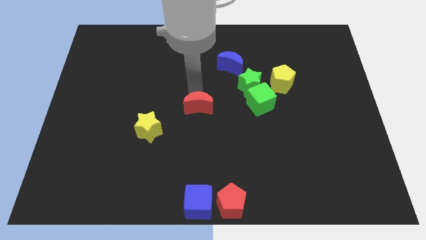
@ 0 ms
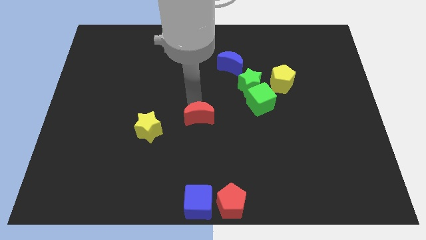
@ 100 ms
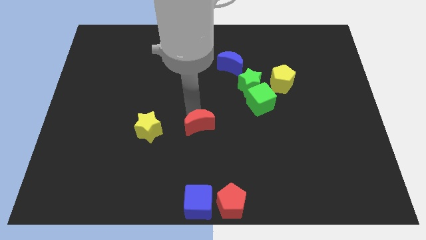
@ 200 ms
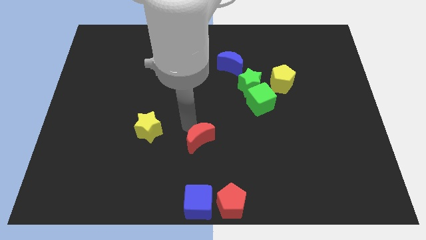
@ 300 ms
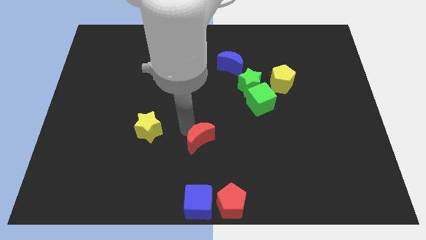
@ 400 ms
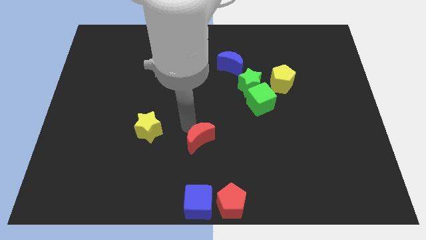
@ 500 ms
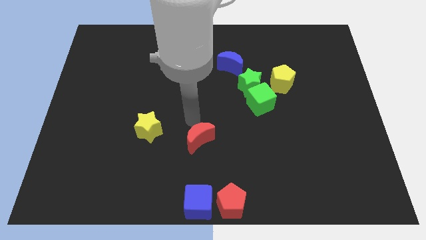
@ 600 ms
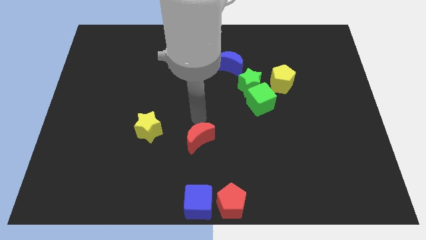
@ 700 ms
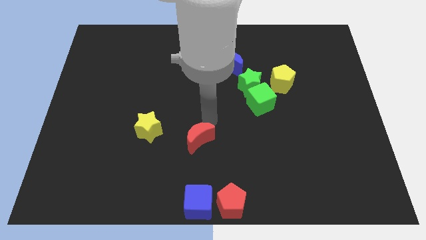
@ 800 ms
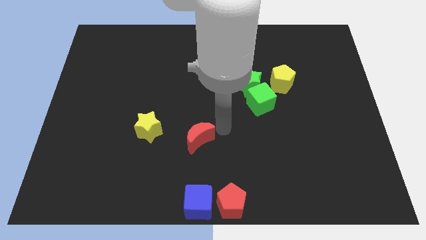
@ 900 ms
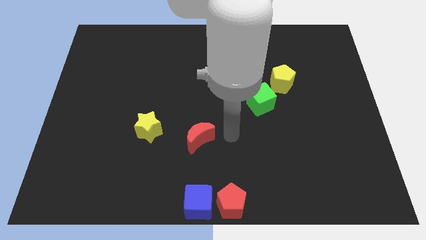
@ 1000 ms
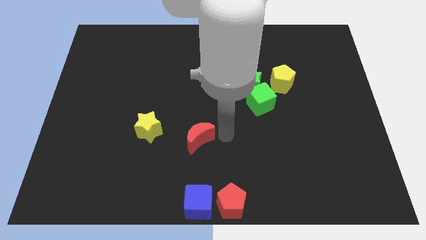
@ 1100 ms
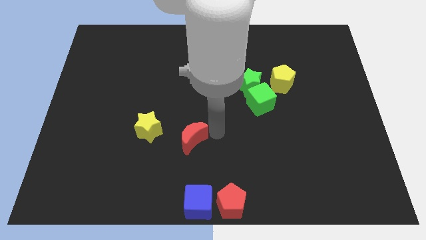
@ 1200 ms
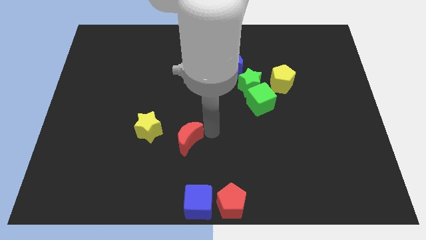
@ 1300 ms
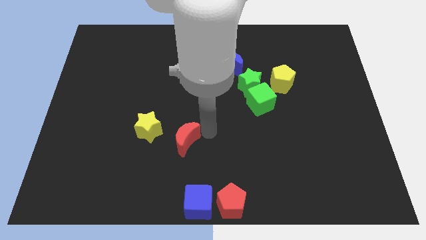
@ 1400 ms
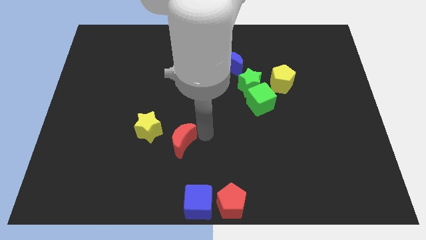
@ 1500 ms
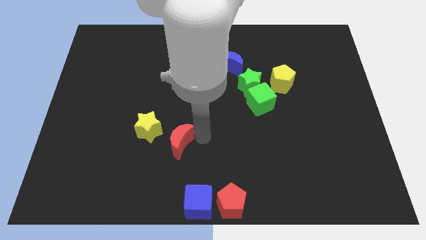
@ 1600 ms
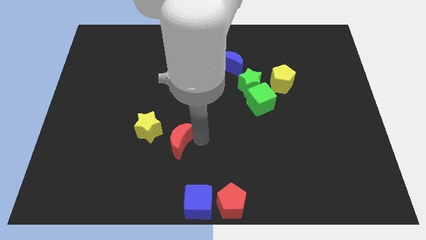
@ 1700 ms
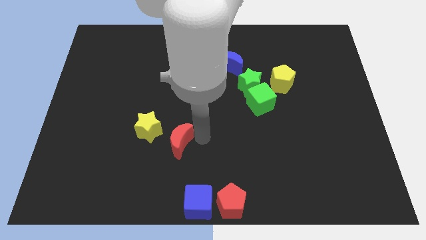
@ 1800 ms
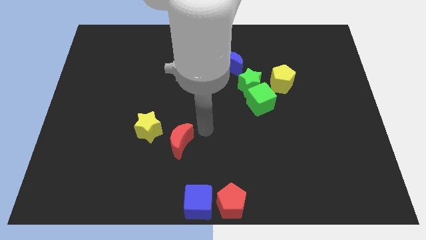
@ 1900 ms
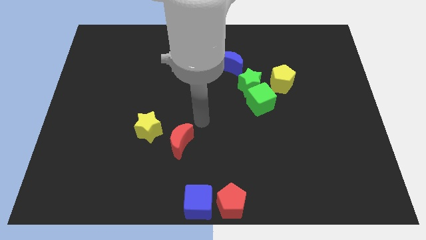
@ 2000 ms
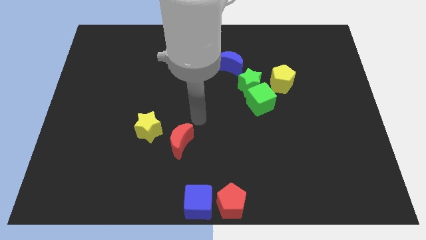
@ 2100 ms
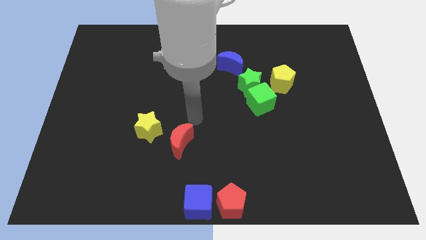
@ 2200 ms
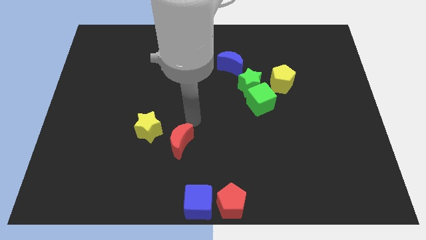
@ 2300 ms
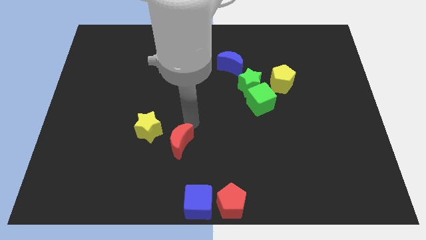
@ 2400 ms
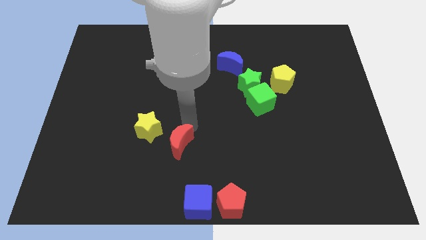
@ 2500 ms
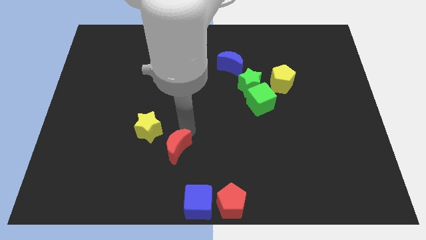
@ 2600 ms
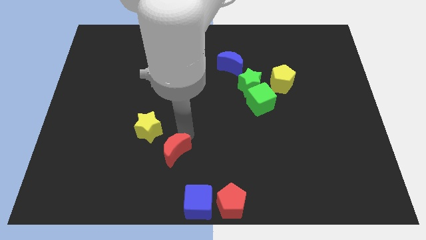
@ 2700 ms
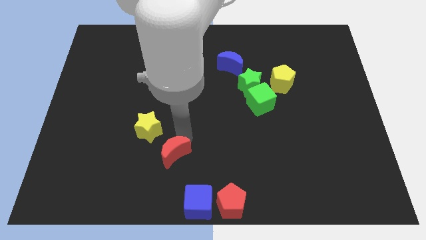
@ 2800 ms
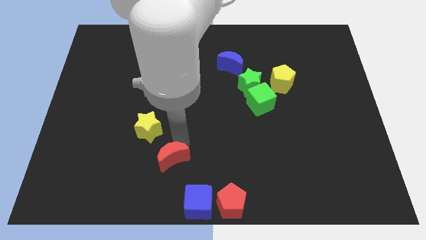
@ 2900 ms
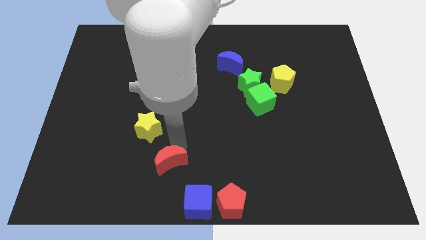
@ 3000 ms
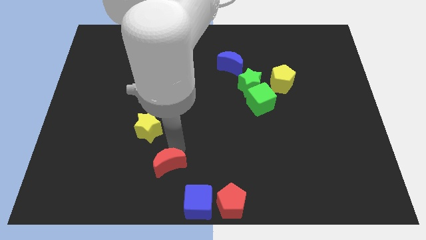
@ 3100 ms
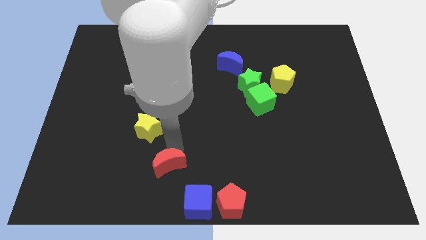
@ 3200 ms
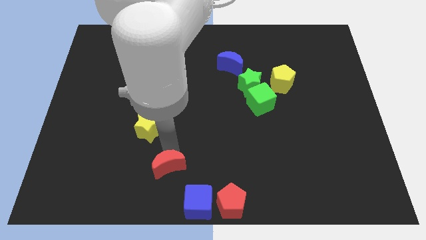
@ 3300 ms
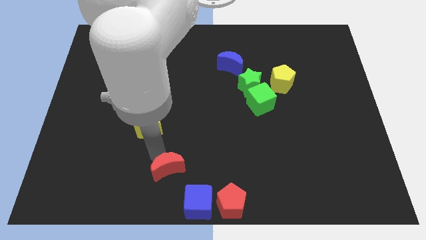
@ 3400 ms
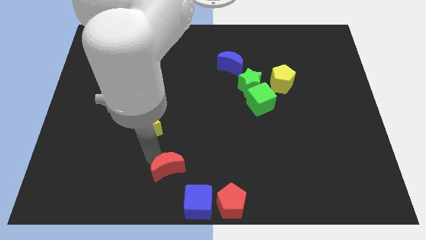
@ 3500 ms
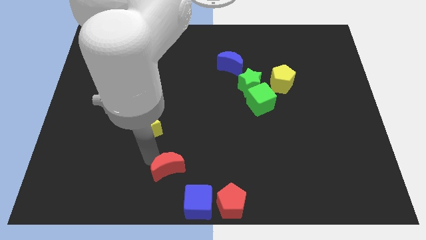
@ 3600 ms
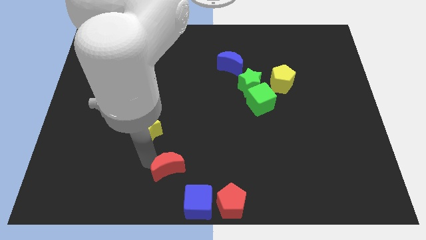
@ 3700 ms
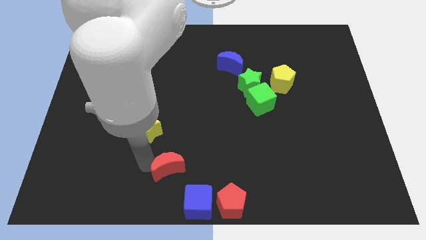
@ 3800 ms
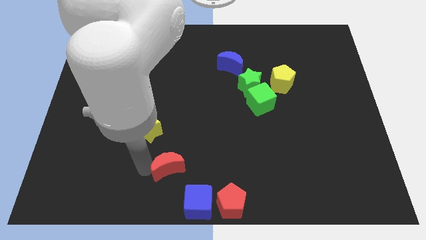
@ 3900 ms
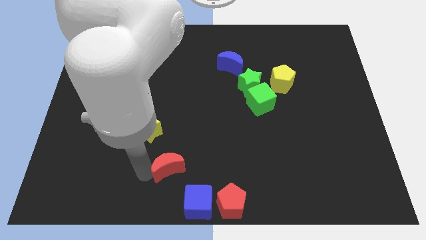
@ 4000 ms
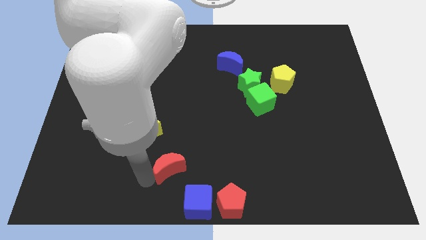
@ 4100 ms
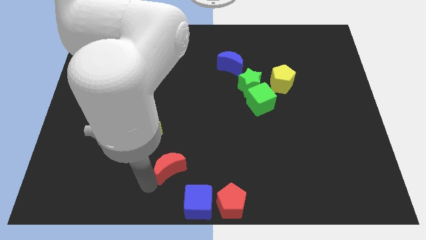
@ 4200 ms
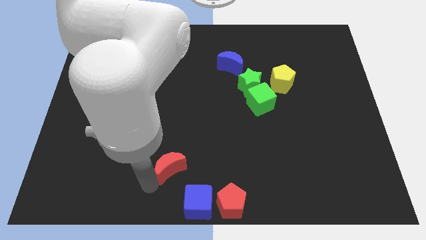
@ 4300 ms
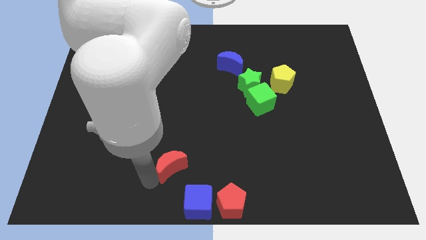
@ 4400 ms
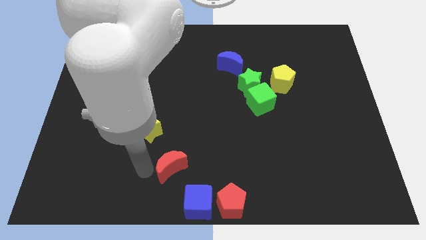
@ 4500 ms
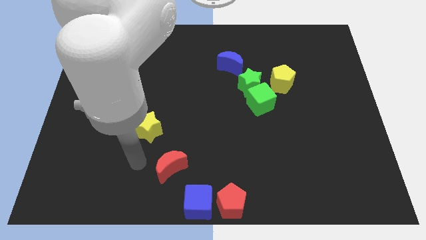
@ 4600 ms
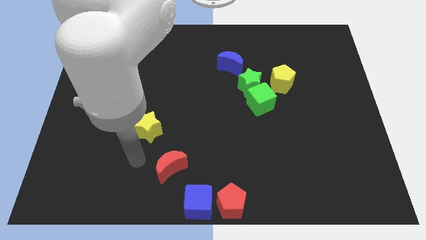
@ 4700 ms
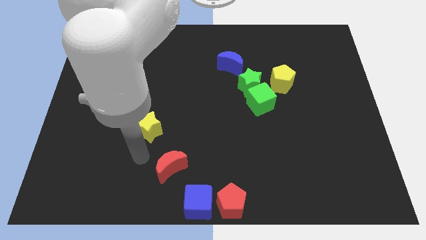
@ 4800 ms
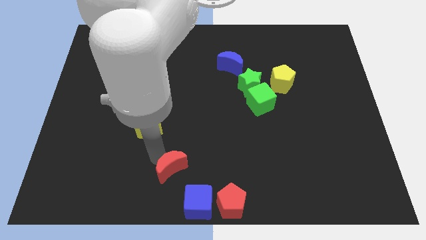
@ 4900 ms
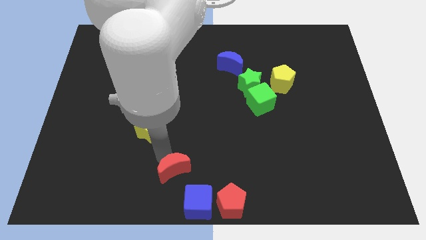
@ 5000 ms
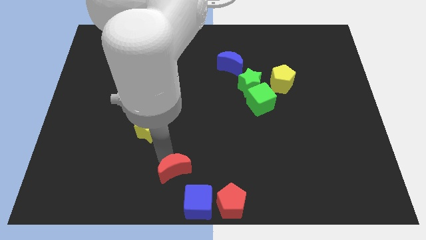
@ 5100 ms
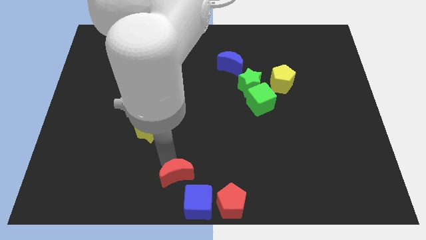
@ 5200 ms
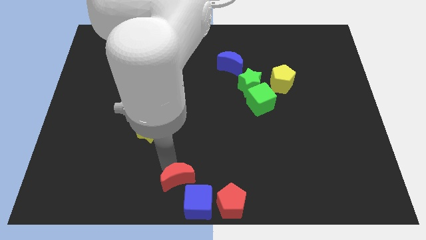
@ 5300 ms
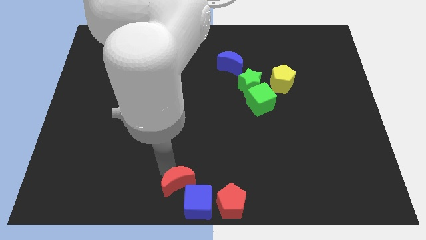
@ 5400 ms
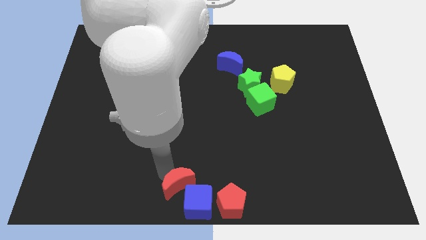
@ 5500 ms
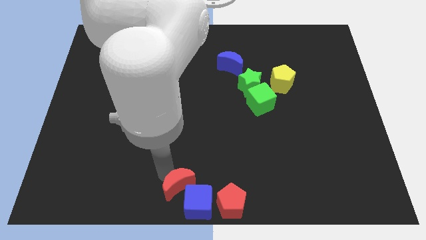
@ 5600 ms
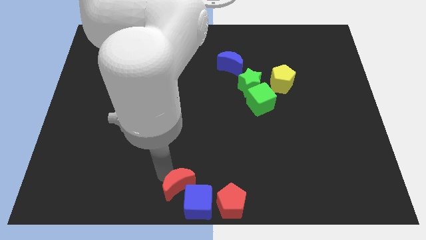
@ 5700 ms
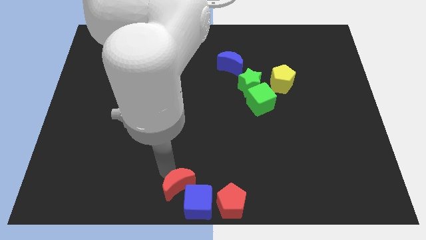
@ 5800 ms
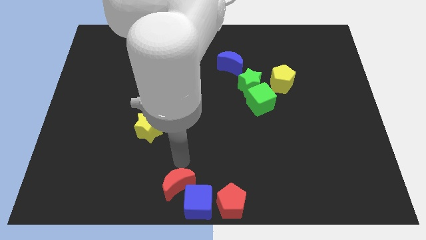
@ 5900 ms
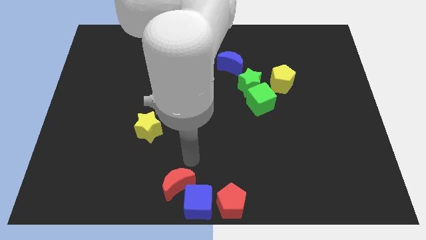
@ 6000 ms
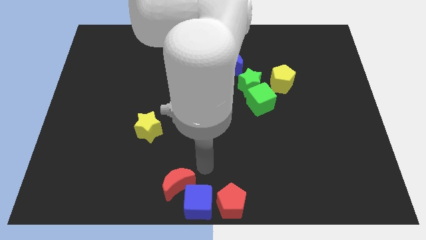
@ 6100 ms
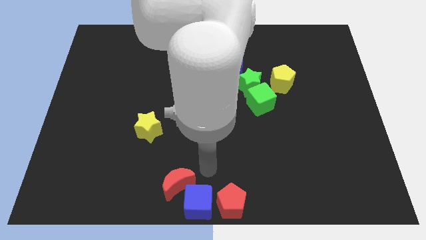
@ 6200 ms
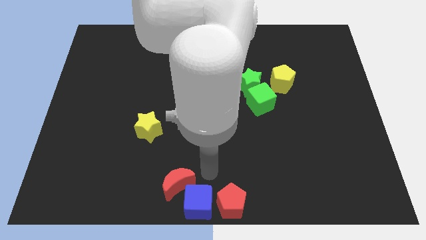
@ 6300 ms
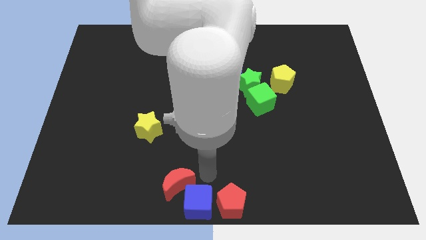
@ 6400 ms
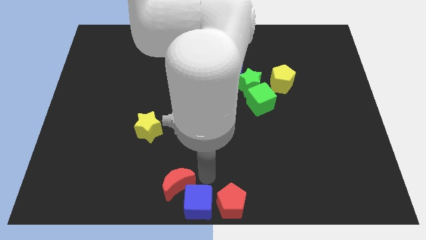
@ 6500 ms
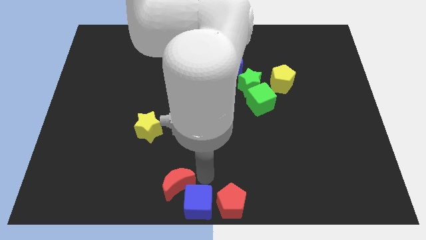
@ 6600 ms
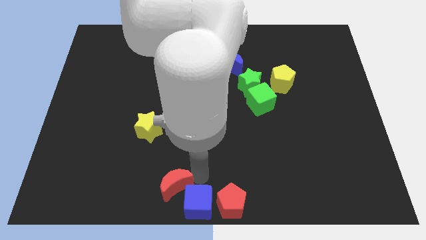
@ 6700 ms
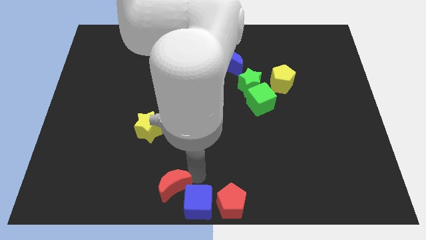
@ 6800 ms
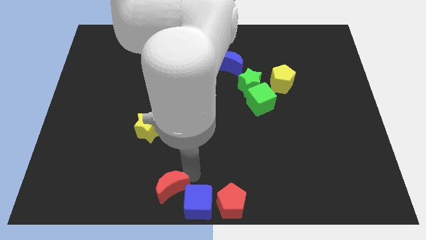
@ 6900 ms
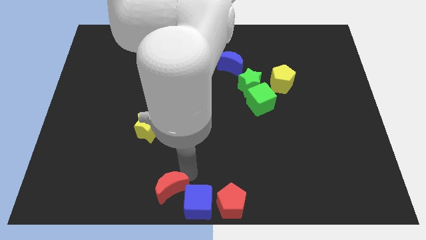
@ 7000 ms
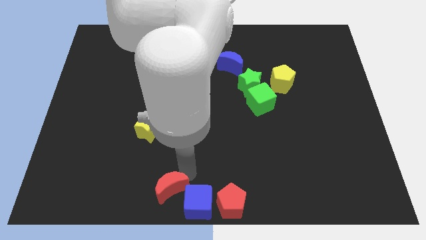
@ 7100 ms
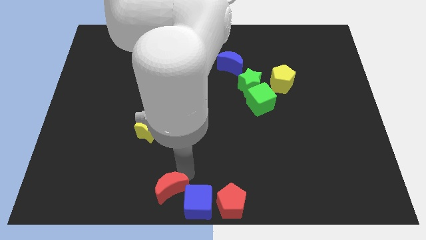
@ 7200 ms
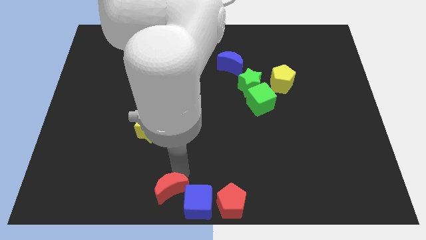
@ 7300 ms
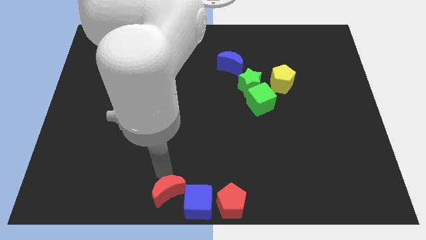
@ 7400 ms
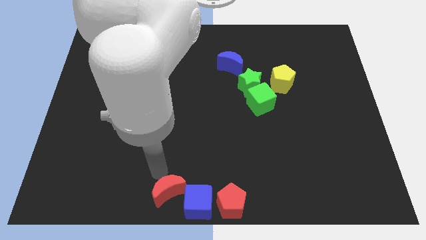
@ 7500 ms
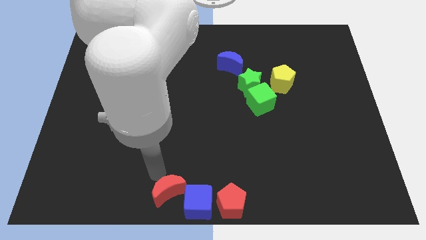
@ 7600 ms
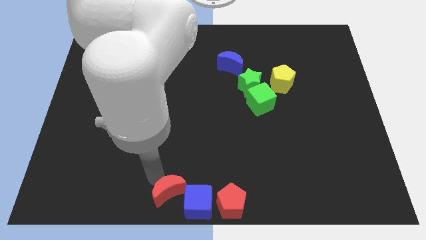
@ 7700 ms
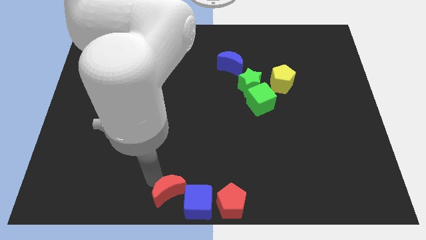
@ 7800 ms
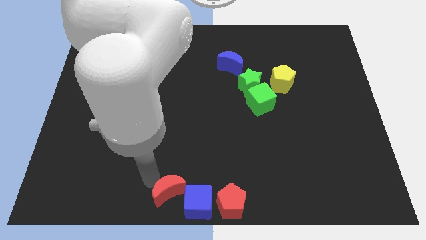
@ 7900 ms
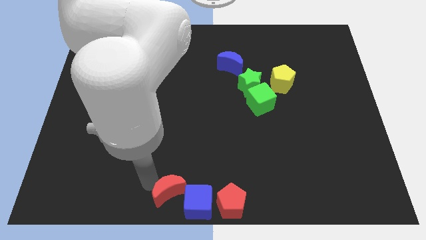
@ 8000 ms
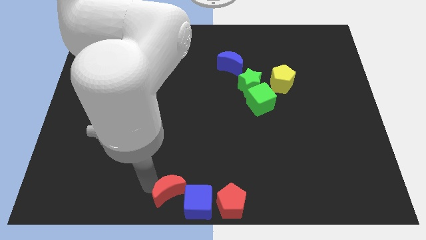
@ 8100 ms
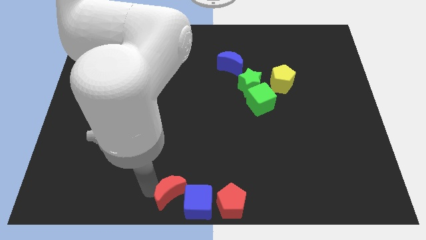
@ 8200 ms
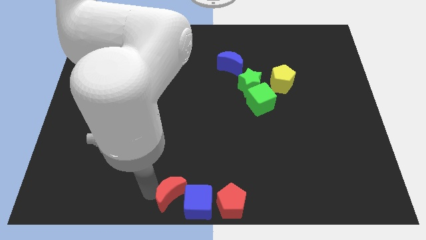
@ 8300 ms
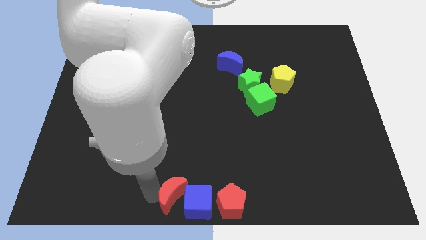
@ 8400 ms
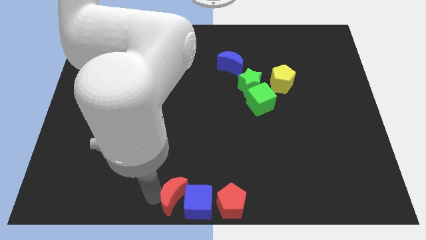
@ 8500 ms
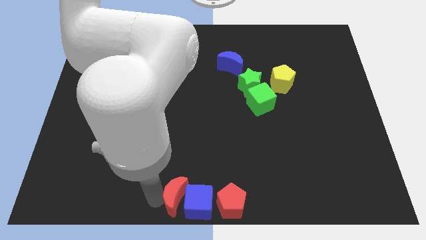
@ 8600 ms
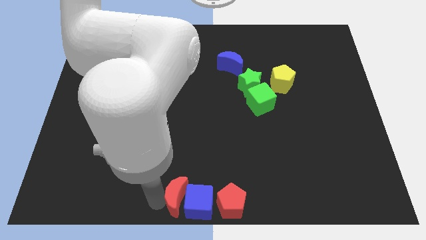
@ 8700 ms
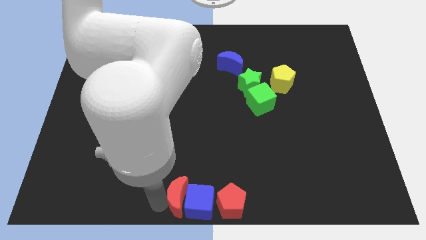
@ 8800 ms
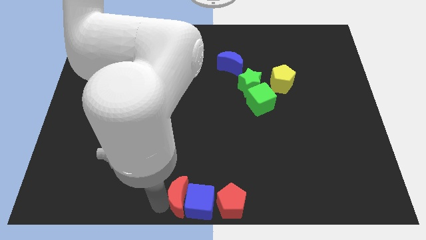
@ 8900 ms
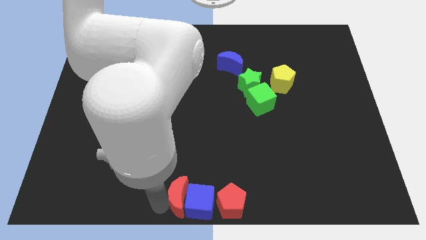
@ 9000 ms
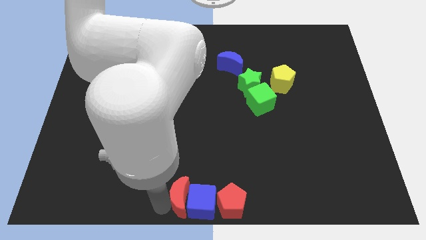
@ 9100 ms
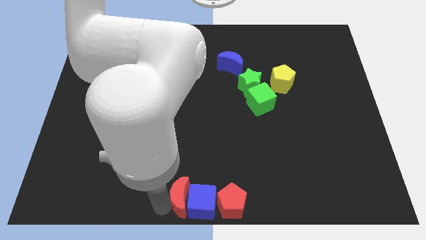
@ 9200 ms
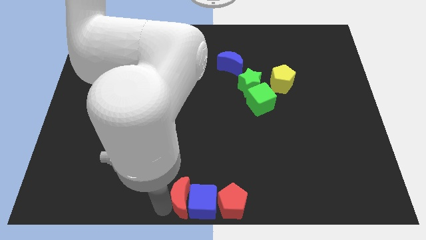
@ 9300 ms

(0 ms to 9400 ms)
push red moon into blue cube
